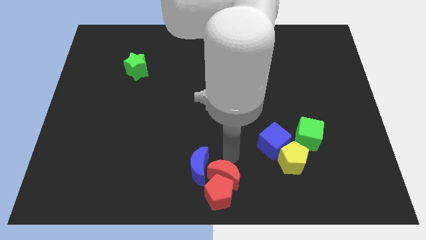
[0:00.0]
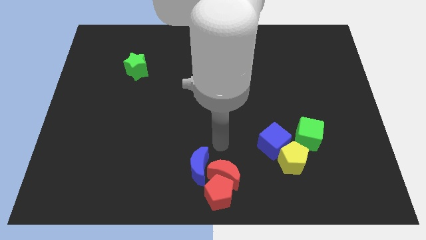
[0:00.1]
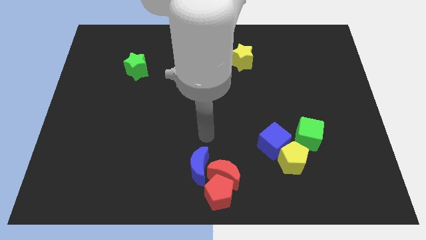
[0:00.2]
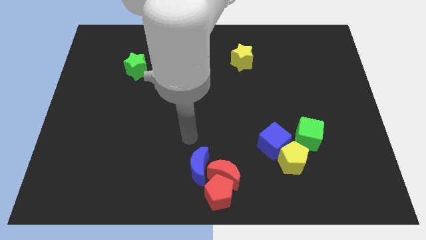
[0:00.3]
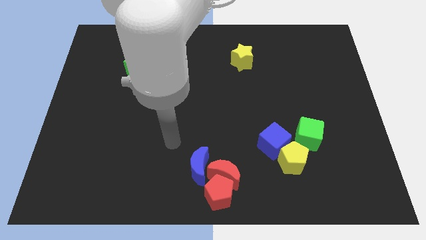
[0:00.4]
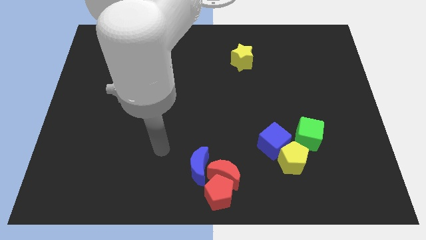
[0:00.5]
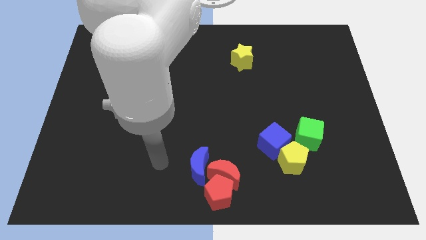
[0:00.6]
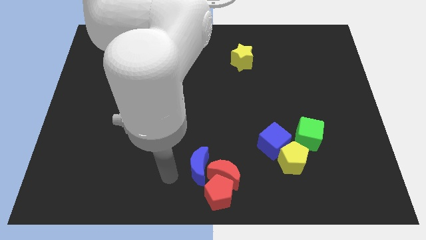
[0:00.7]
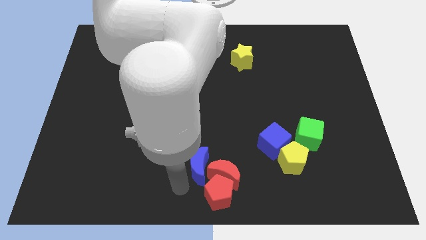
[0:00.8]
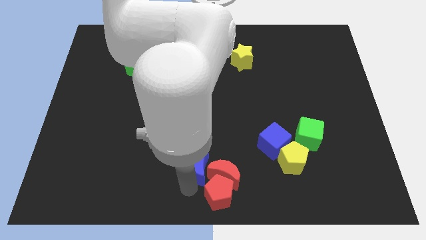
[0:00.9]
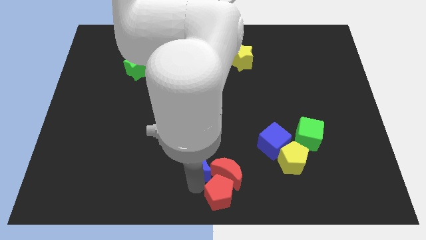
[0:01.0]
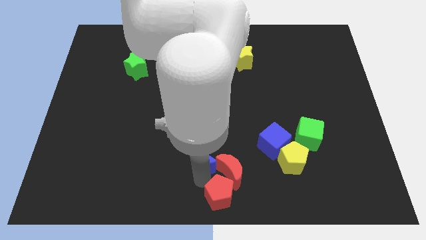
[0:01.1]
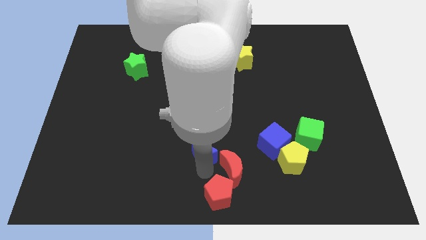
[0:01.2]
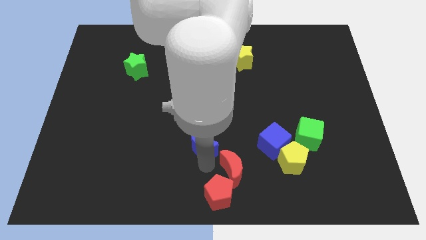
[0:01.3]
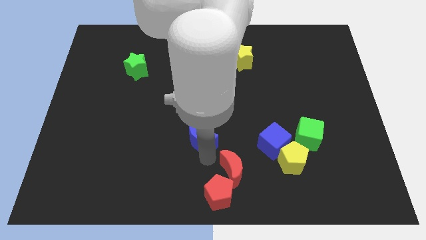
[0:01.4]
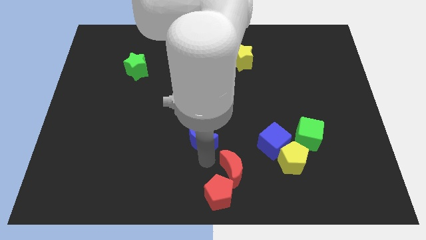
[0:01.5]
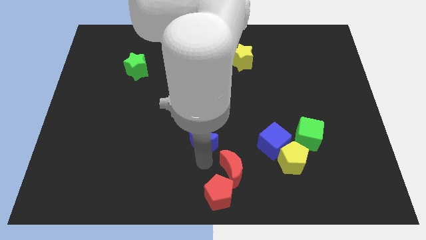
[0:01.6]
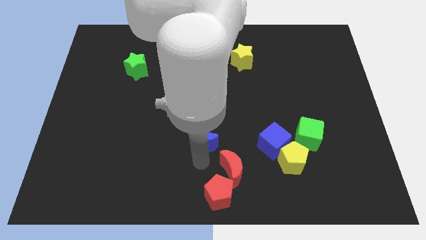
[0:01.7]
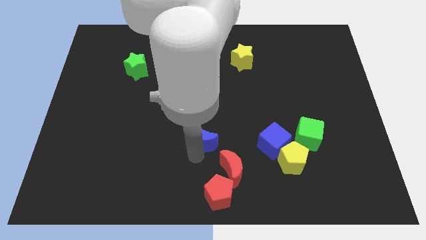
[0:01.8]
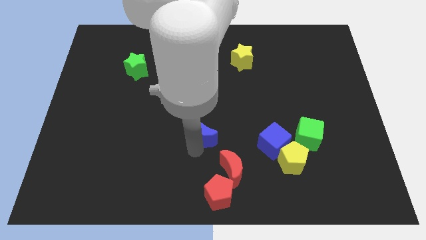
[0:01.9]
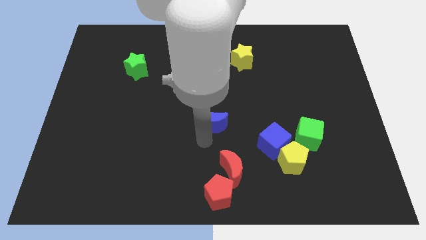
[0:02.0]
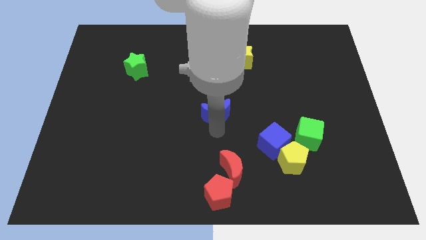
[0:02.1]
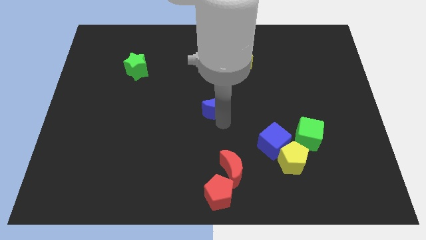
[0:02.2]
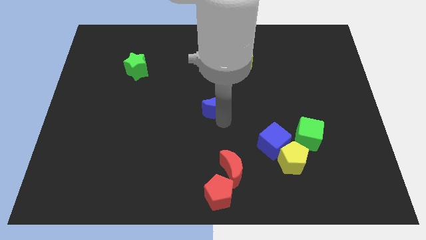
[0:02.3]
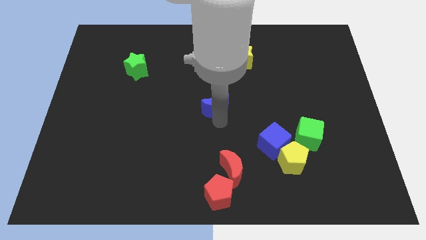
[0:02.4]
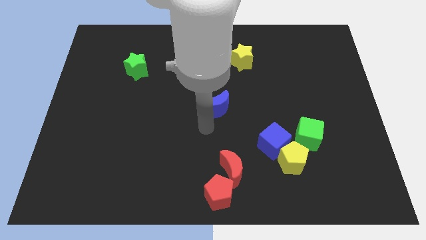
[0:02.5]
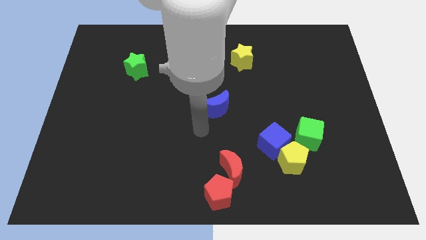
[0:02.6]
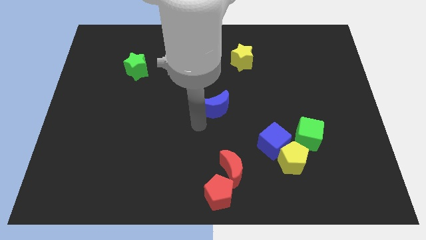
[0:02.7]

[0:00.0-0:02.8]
place the blue moon in the middle of the board

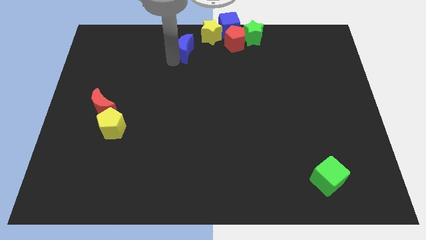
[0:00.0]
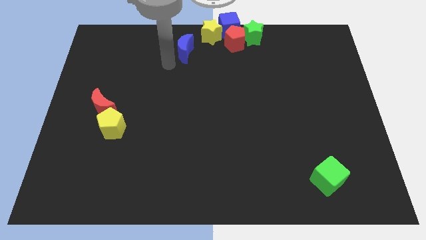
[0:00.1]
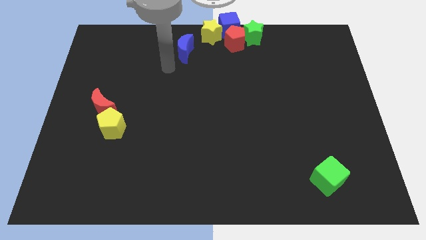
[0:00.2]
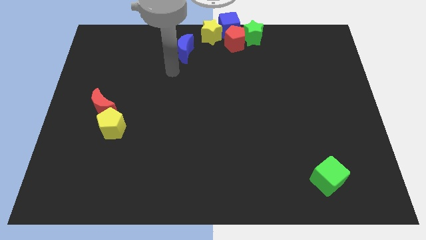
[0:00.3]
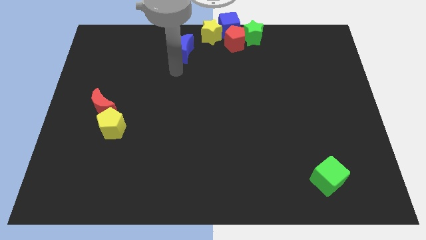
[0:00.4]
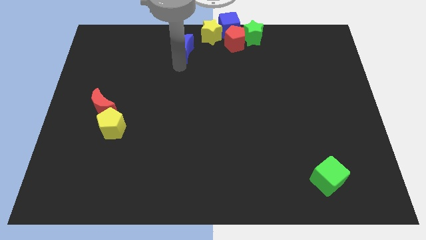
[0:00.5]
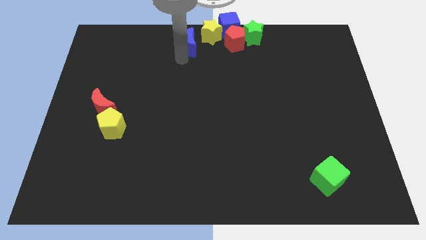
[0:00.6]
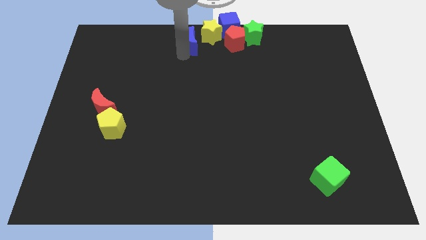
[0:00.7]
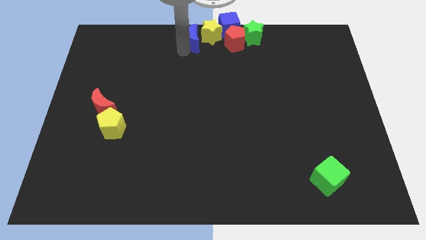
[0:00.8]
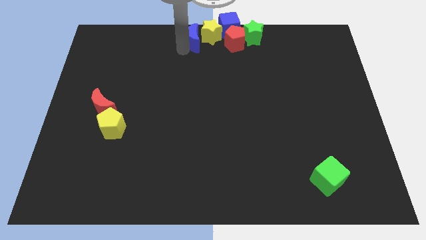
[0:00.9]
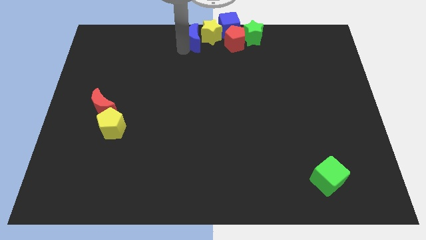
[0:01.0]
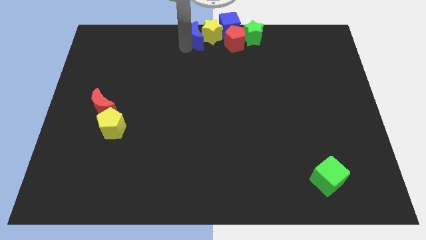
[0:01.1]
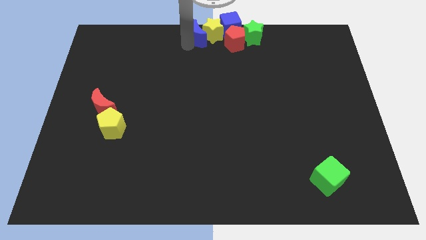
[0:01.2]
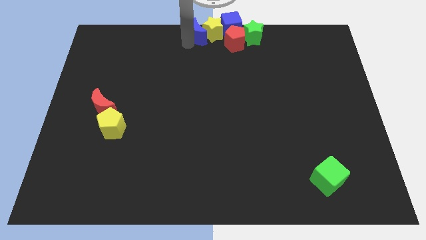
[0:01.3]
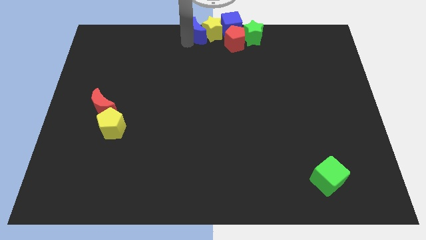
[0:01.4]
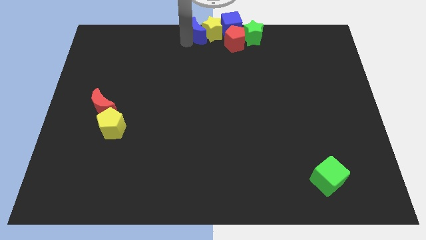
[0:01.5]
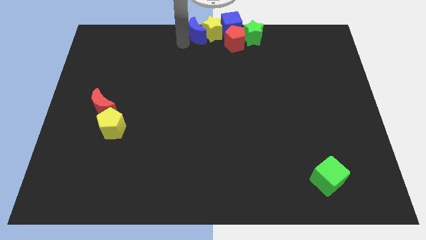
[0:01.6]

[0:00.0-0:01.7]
push the blue crescent into the yellow star

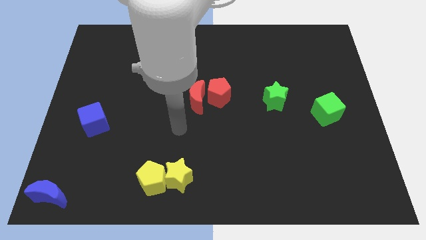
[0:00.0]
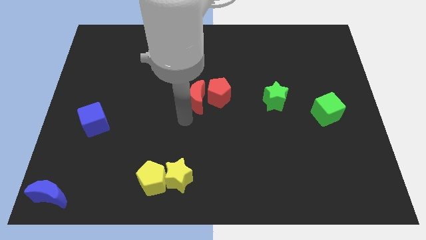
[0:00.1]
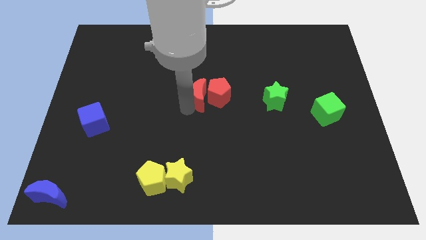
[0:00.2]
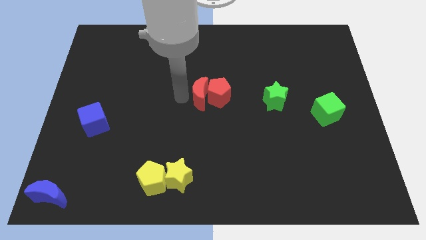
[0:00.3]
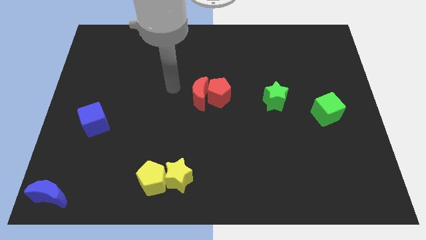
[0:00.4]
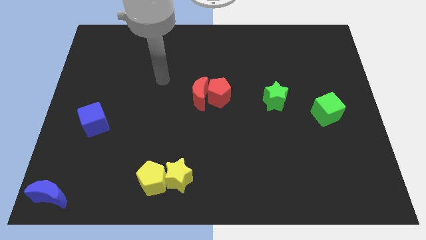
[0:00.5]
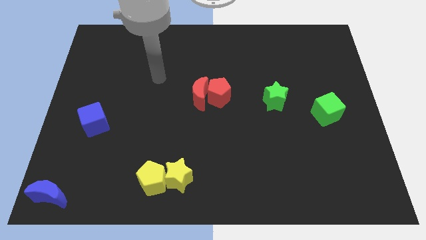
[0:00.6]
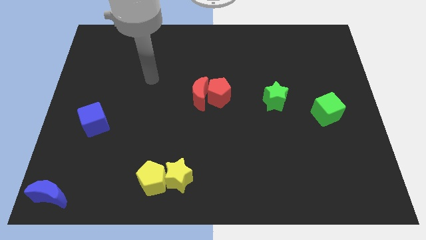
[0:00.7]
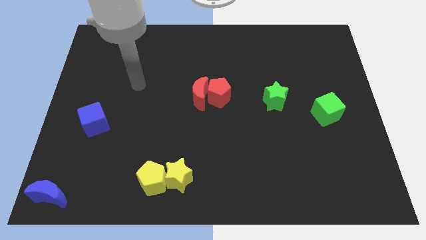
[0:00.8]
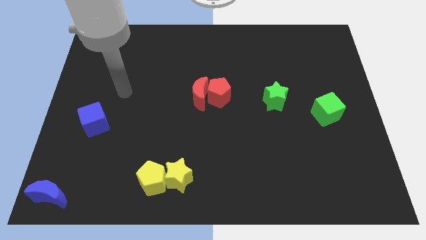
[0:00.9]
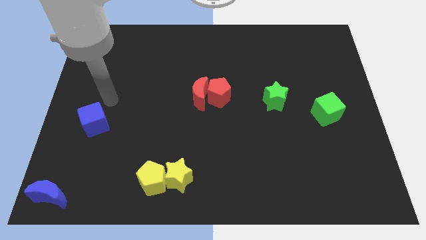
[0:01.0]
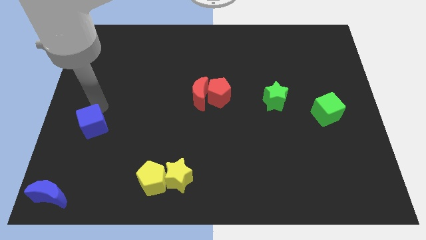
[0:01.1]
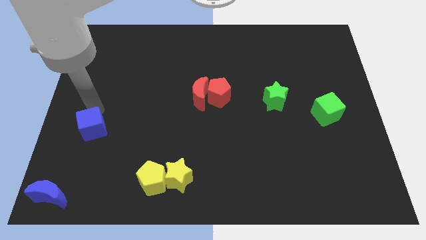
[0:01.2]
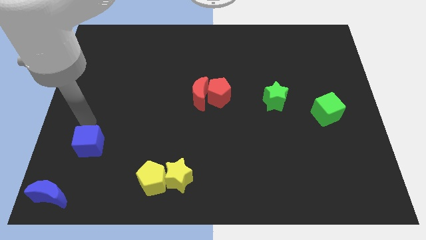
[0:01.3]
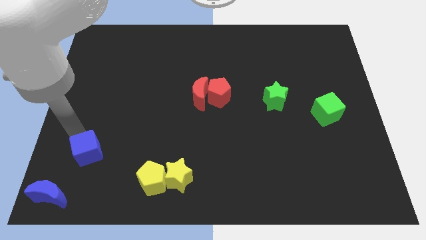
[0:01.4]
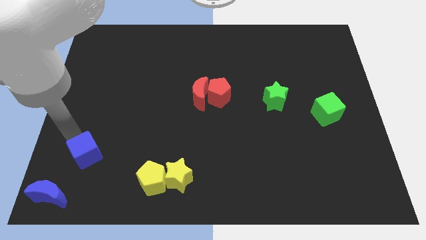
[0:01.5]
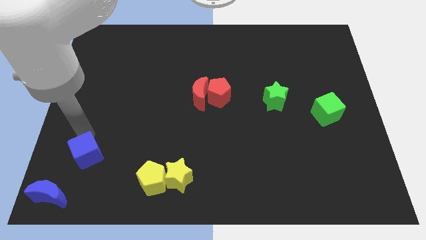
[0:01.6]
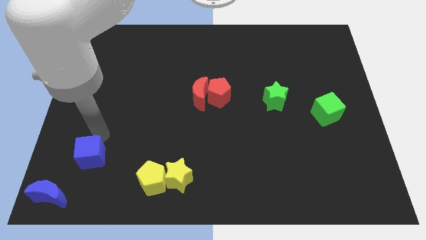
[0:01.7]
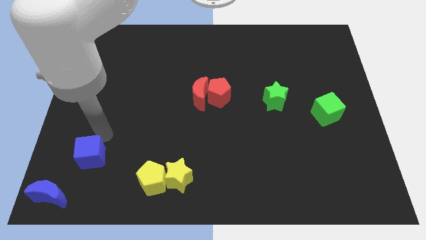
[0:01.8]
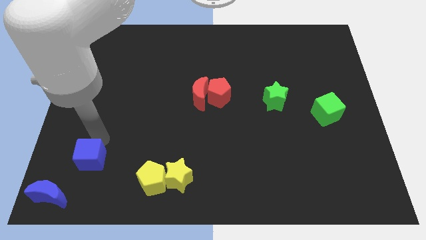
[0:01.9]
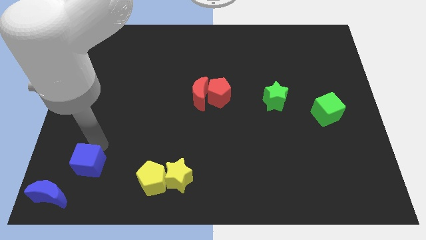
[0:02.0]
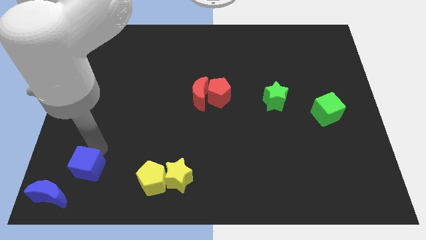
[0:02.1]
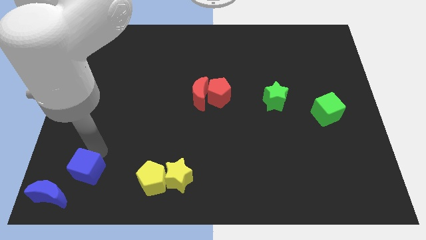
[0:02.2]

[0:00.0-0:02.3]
move the blue cube towards the blue moon

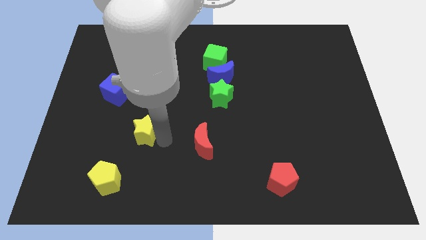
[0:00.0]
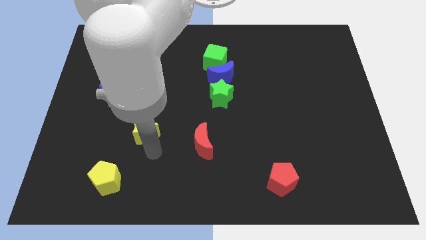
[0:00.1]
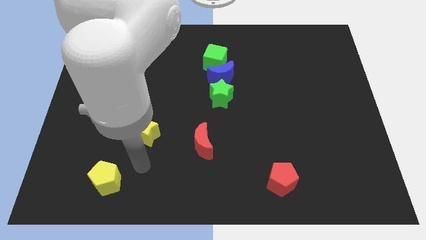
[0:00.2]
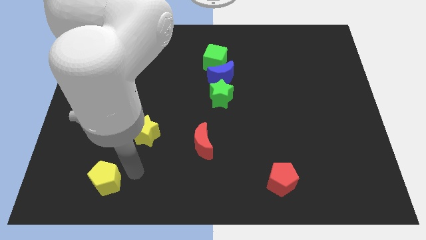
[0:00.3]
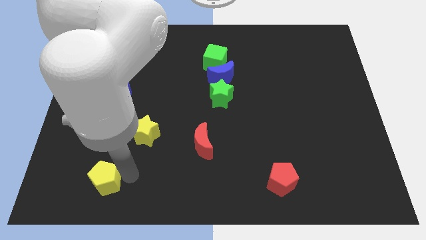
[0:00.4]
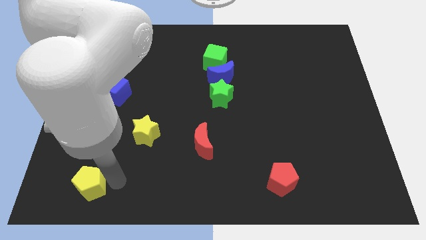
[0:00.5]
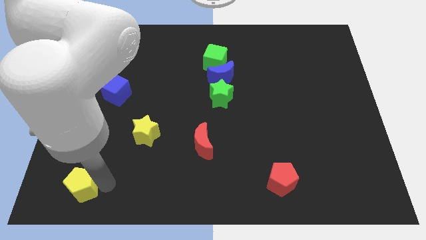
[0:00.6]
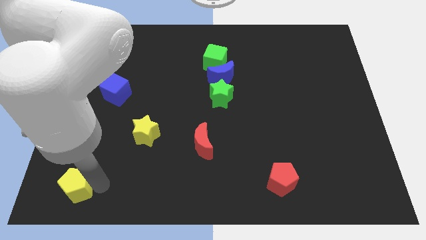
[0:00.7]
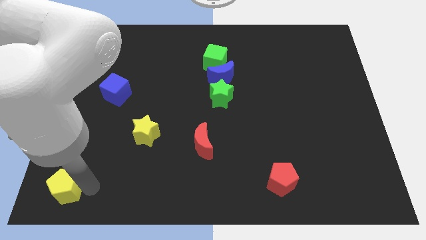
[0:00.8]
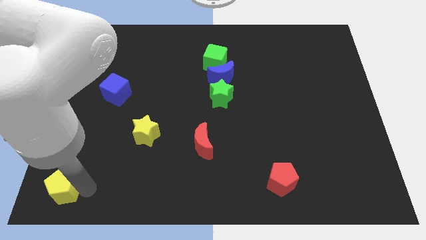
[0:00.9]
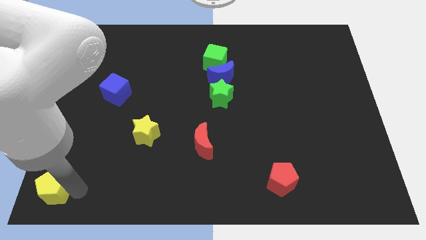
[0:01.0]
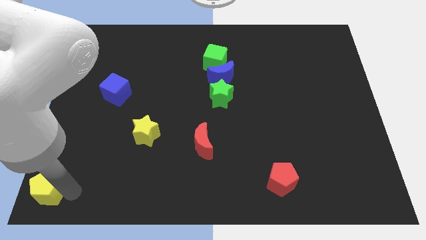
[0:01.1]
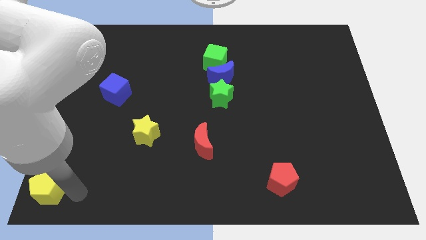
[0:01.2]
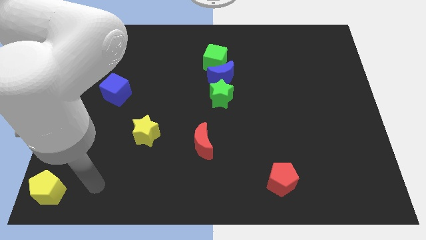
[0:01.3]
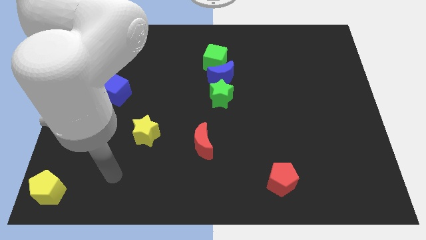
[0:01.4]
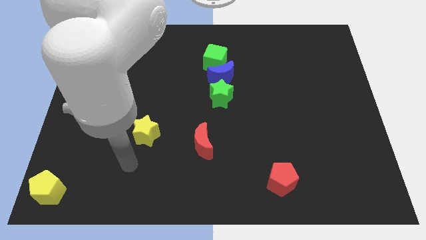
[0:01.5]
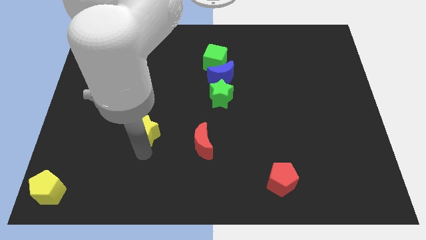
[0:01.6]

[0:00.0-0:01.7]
put the yellow pentagon at the bottom left corner of the board

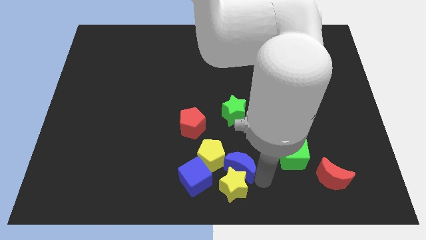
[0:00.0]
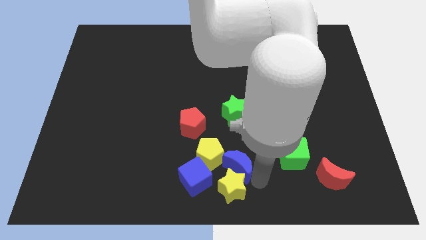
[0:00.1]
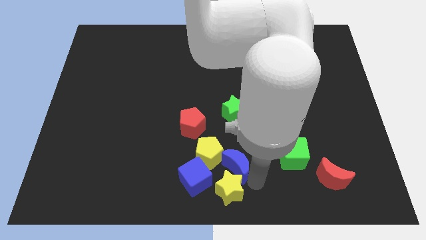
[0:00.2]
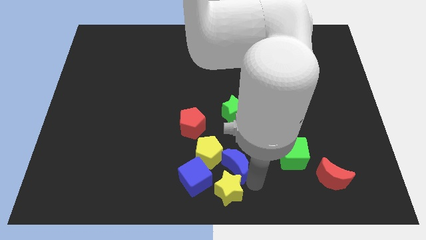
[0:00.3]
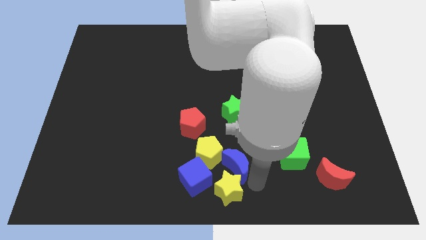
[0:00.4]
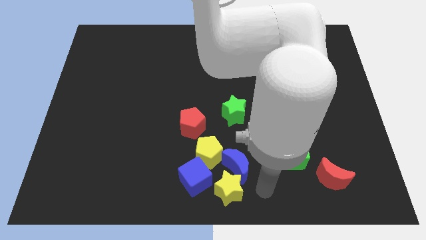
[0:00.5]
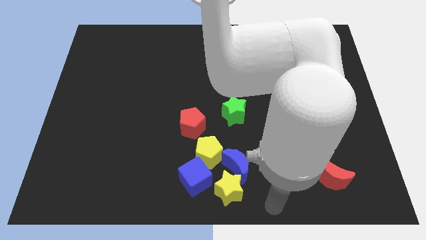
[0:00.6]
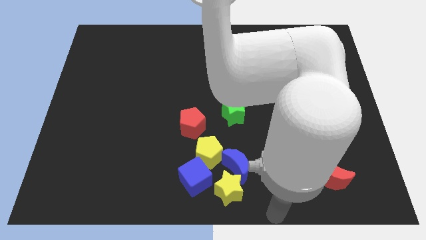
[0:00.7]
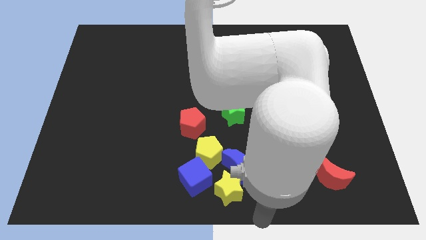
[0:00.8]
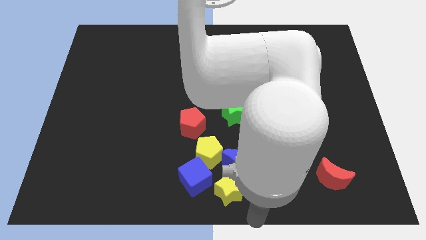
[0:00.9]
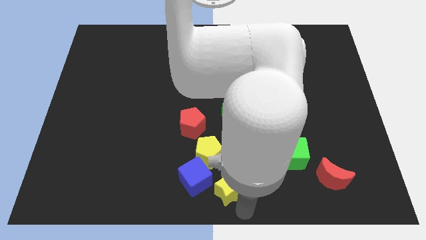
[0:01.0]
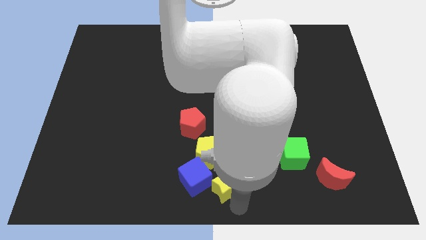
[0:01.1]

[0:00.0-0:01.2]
place the arm at the bottom of the yellow star
